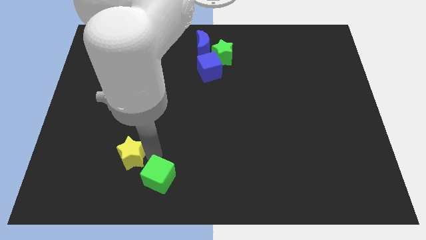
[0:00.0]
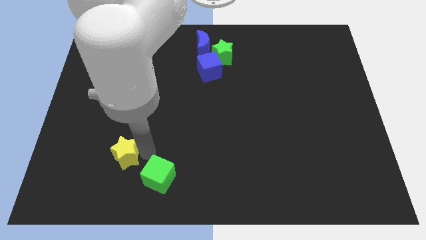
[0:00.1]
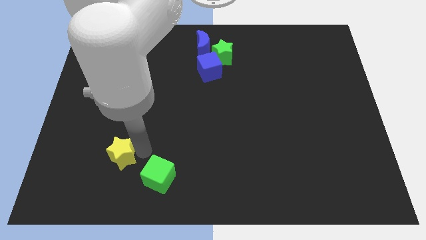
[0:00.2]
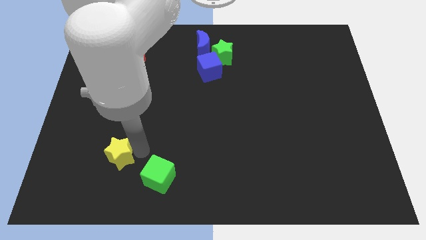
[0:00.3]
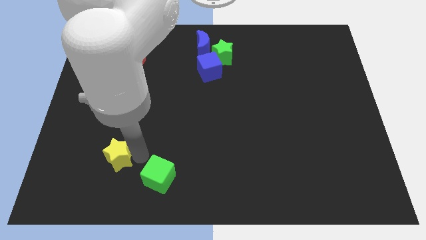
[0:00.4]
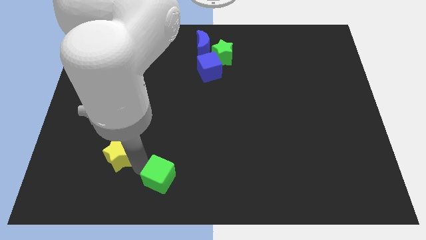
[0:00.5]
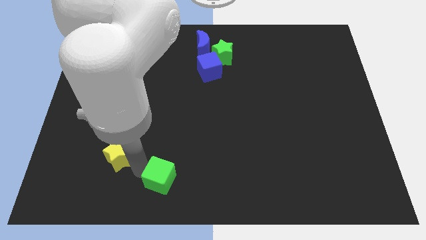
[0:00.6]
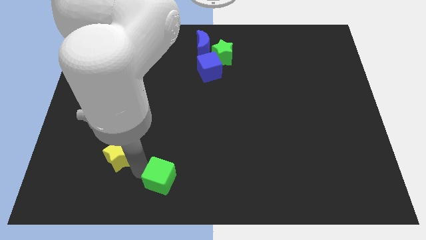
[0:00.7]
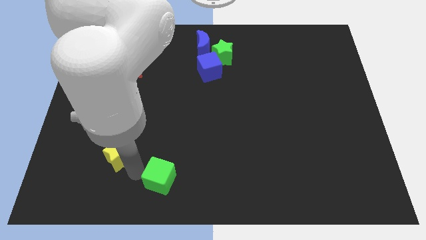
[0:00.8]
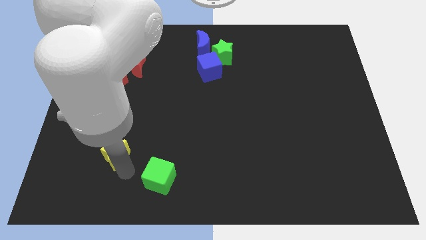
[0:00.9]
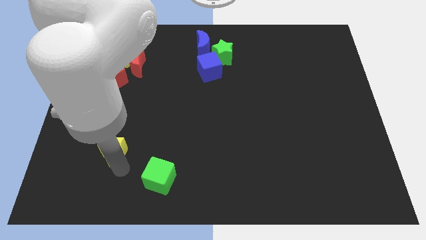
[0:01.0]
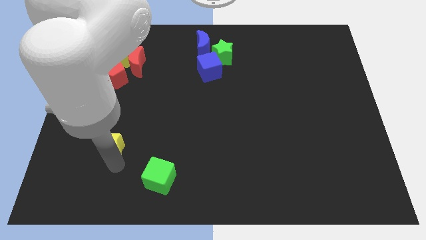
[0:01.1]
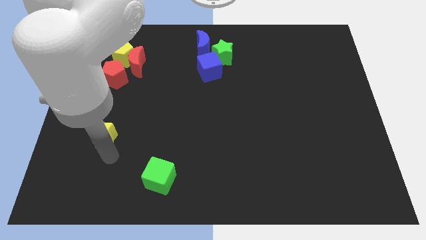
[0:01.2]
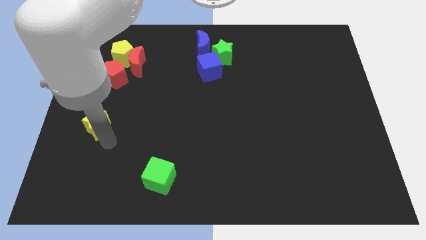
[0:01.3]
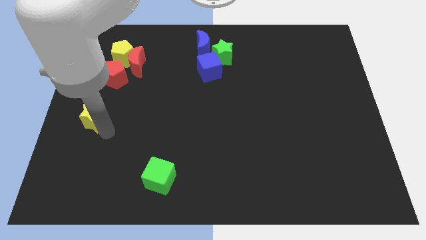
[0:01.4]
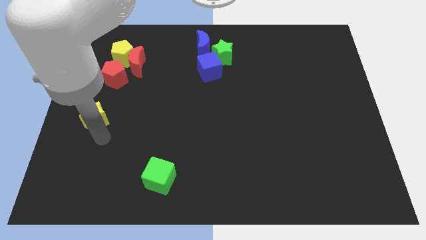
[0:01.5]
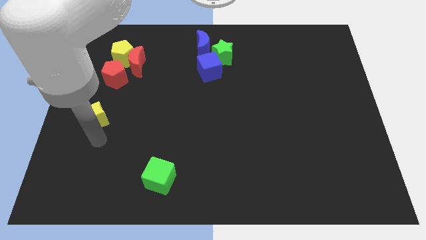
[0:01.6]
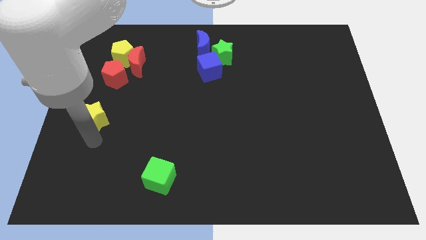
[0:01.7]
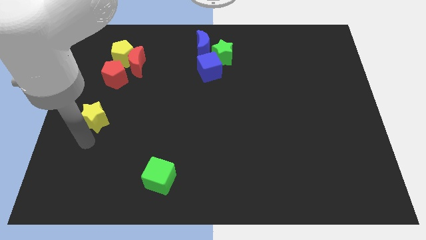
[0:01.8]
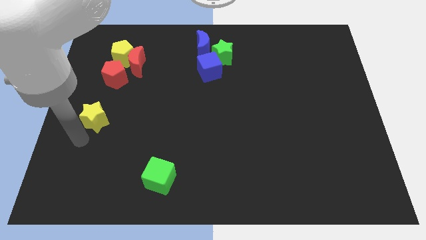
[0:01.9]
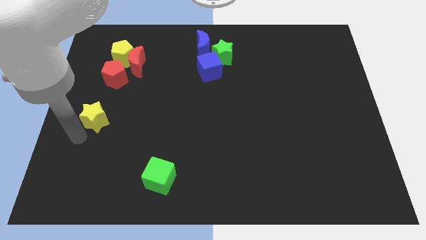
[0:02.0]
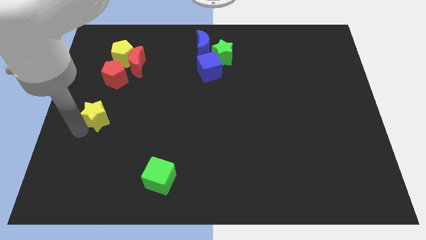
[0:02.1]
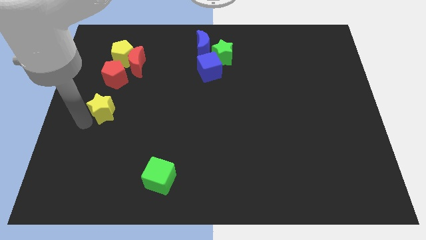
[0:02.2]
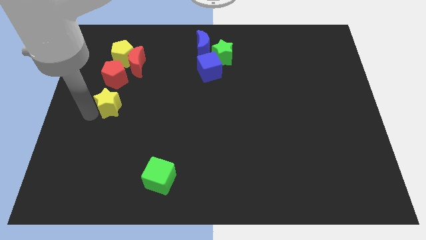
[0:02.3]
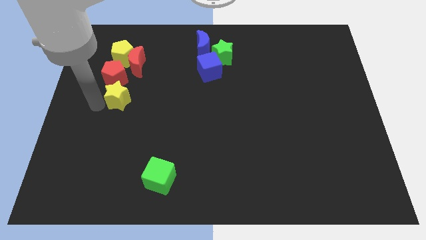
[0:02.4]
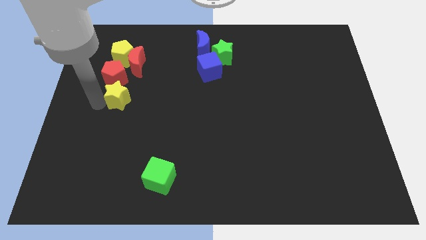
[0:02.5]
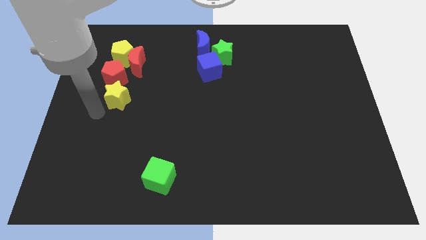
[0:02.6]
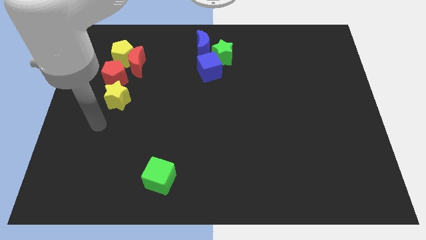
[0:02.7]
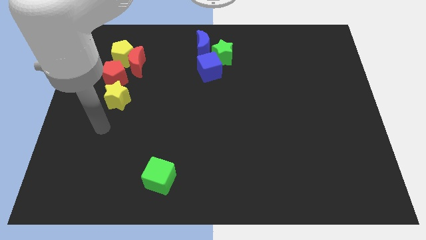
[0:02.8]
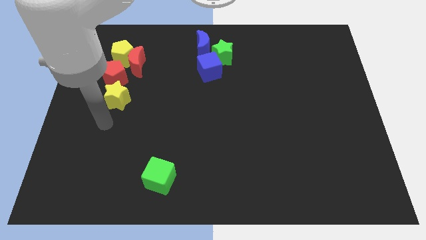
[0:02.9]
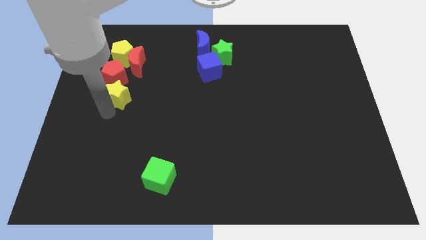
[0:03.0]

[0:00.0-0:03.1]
move the yellow star to the bottom of the red pentagon

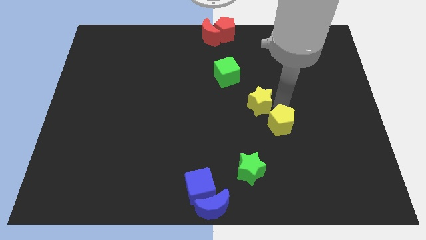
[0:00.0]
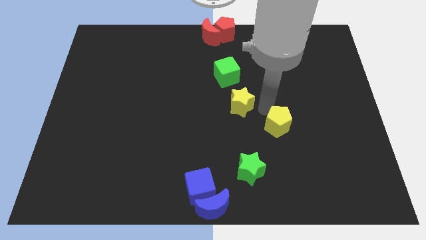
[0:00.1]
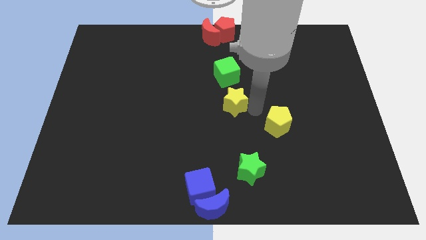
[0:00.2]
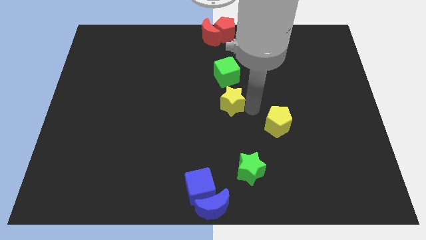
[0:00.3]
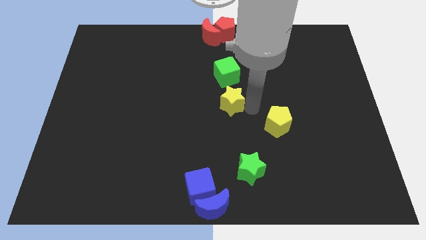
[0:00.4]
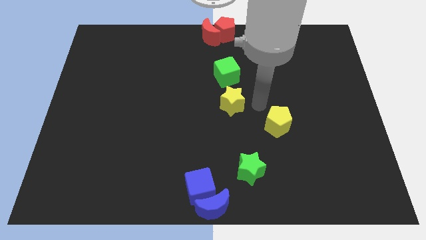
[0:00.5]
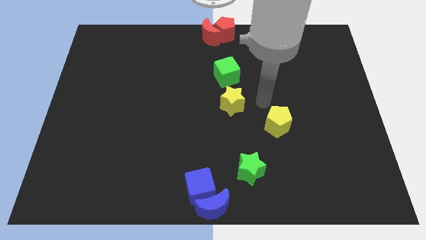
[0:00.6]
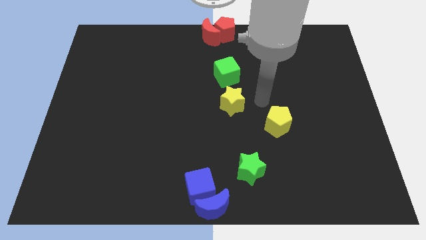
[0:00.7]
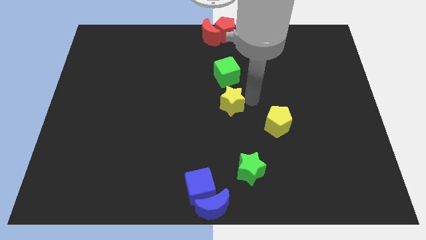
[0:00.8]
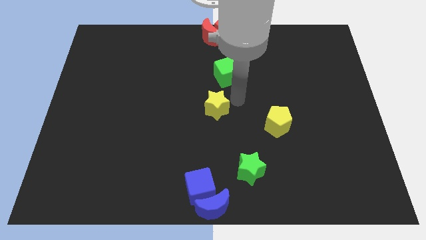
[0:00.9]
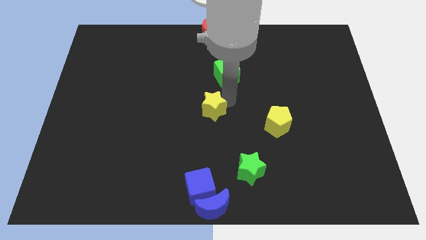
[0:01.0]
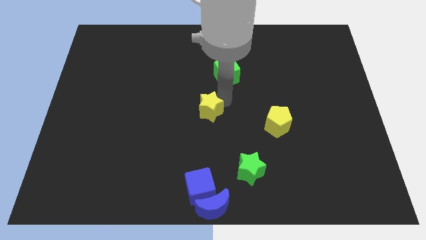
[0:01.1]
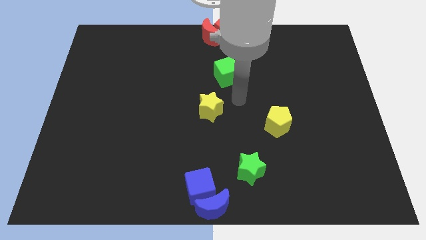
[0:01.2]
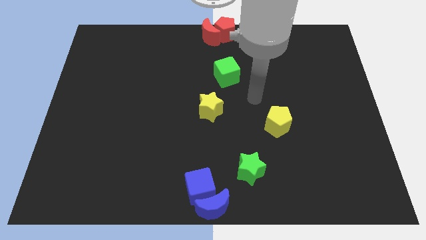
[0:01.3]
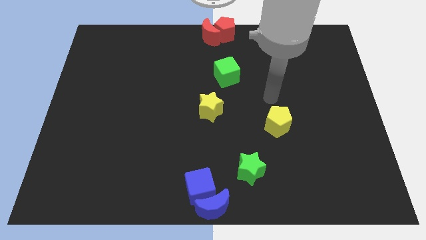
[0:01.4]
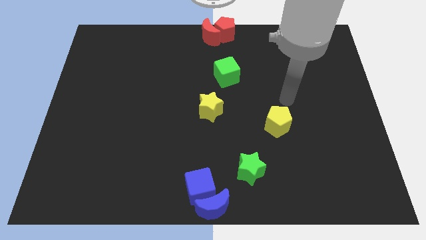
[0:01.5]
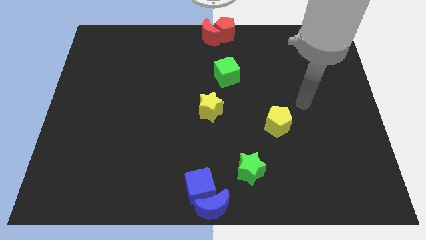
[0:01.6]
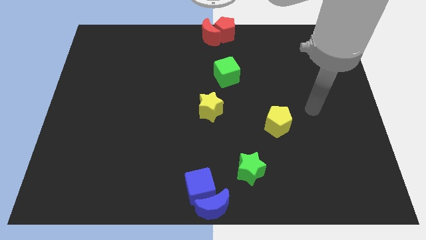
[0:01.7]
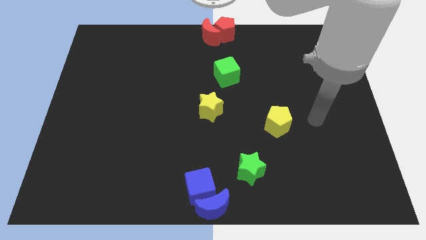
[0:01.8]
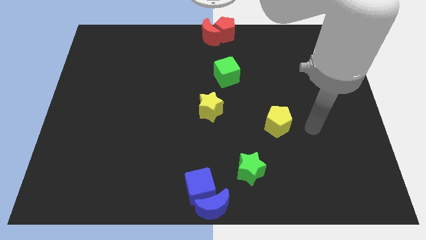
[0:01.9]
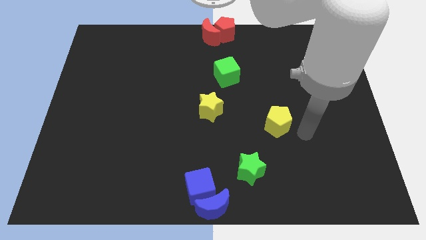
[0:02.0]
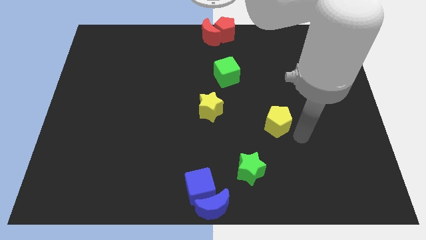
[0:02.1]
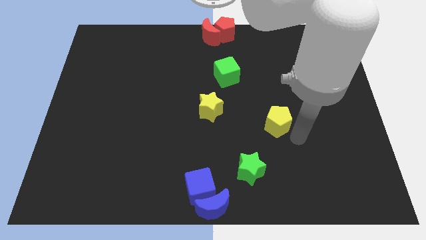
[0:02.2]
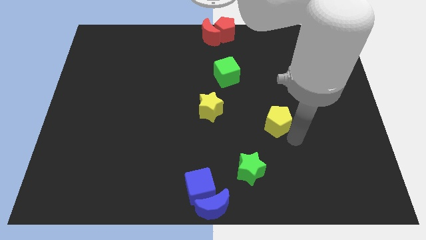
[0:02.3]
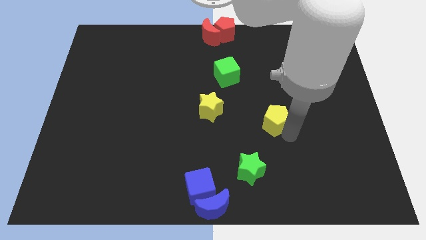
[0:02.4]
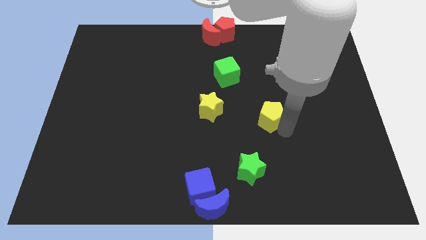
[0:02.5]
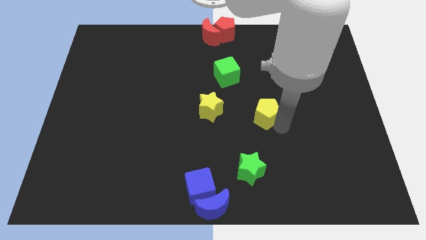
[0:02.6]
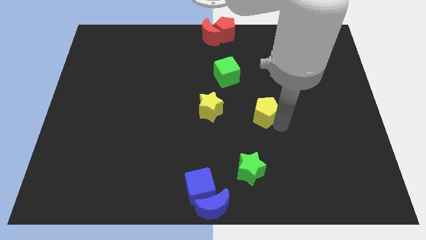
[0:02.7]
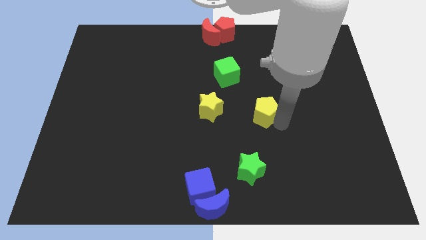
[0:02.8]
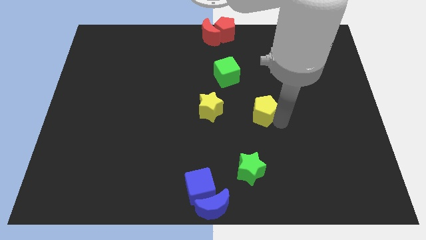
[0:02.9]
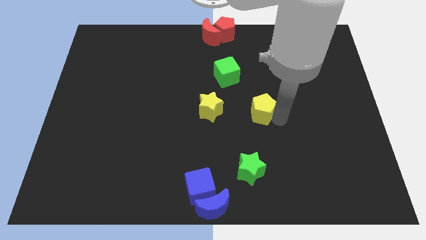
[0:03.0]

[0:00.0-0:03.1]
push the yellow star to the center of the board

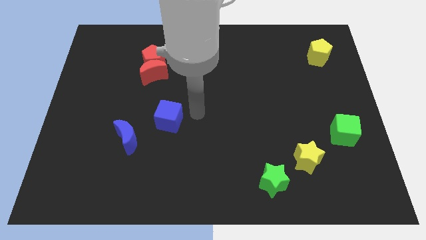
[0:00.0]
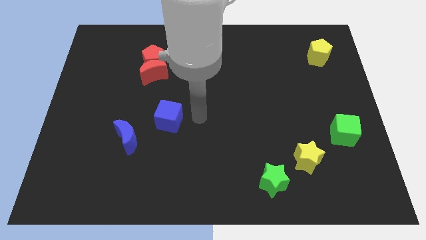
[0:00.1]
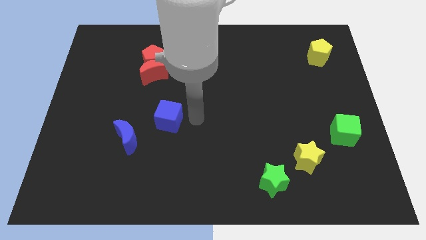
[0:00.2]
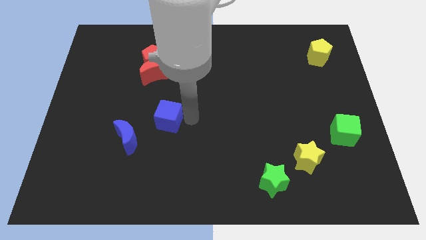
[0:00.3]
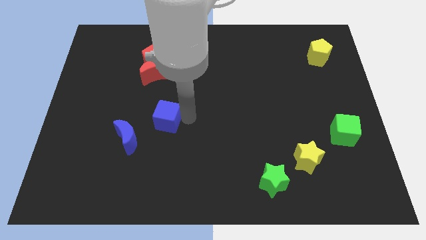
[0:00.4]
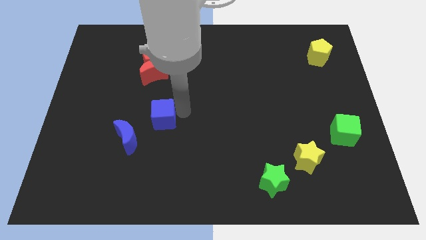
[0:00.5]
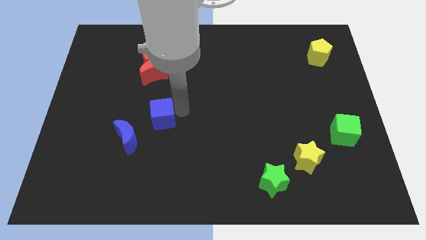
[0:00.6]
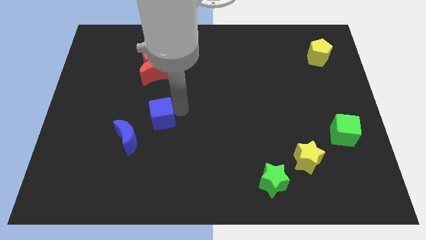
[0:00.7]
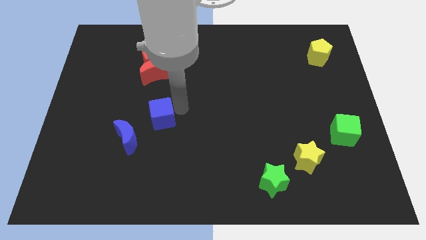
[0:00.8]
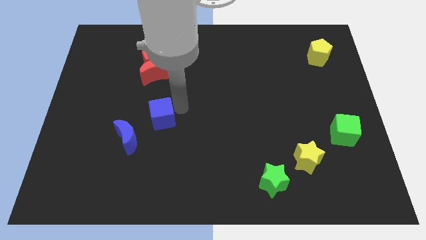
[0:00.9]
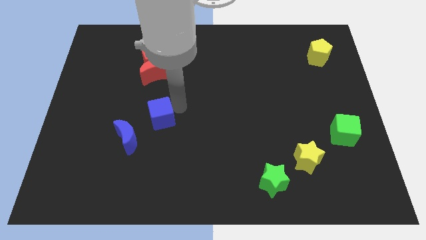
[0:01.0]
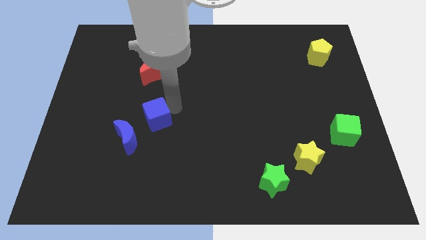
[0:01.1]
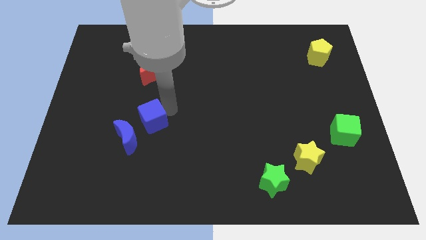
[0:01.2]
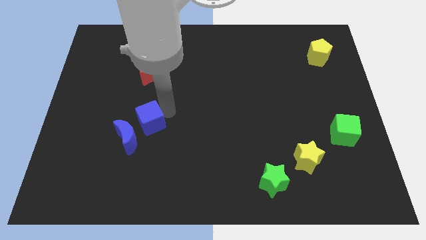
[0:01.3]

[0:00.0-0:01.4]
move the blue cube near blue moon

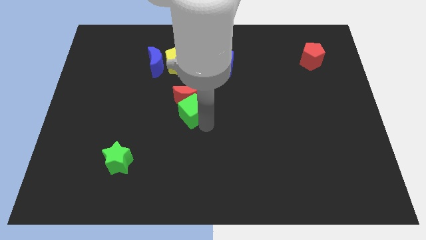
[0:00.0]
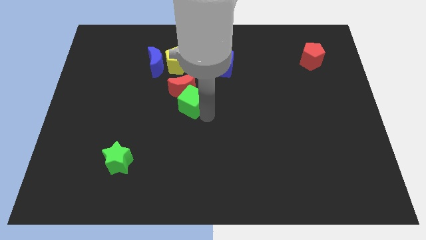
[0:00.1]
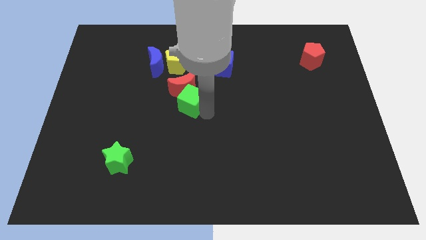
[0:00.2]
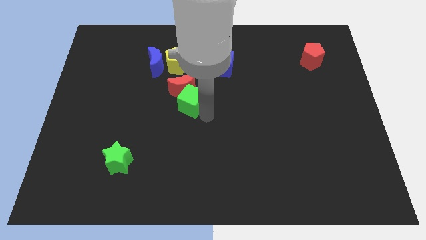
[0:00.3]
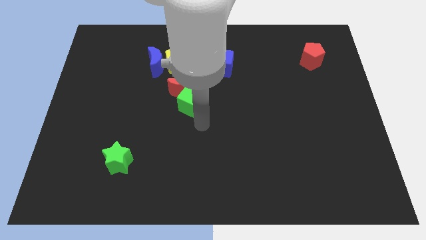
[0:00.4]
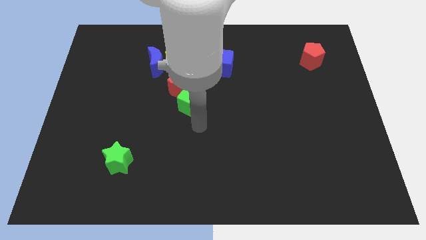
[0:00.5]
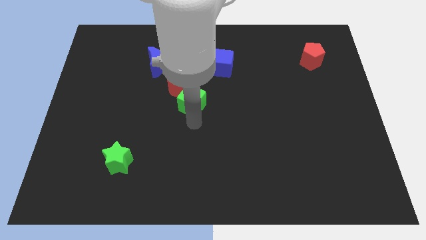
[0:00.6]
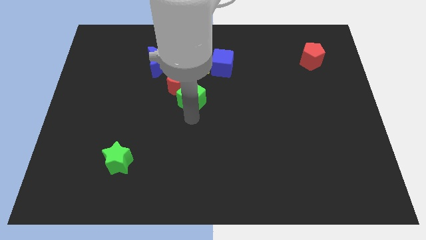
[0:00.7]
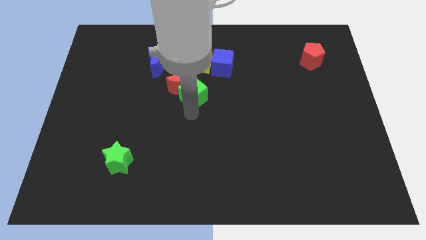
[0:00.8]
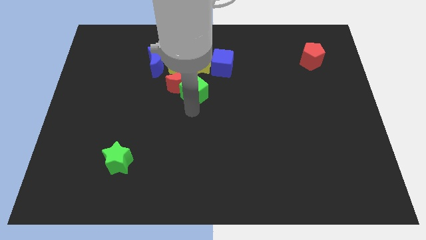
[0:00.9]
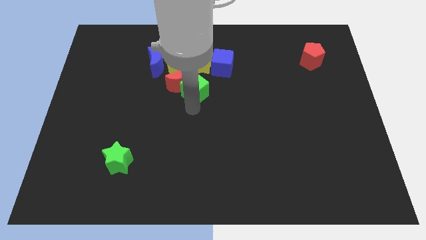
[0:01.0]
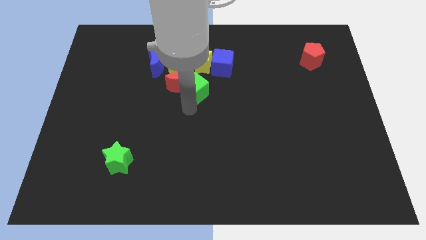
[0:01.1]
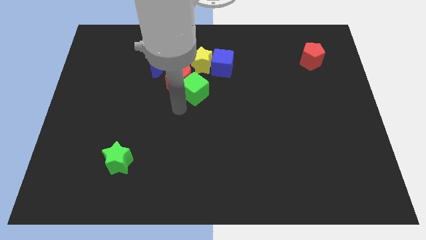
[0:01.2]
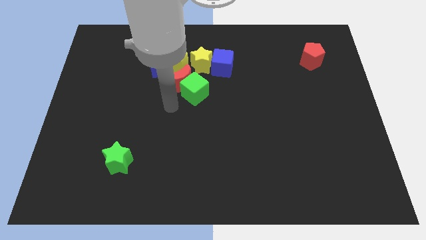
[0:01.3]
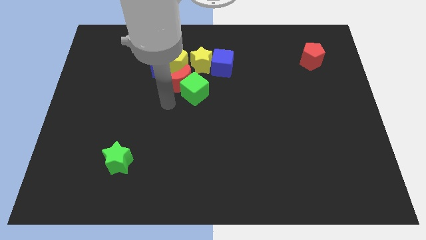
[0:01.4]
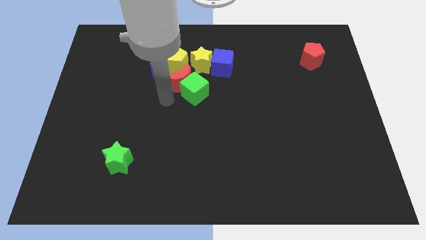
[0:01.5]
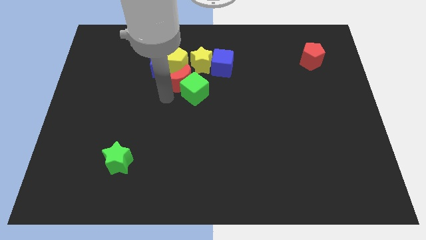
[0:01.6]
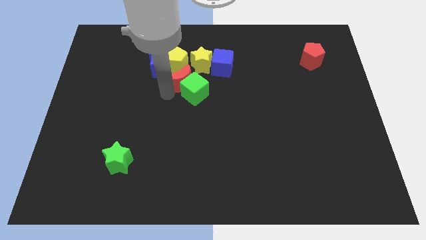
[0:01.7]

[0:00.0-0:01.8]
move the green cube along with the red moon close to the yellow pentagon
